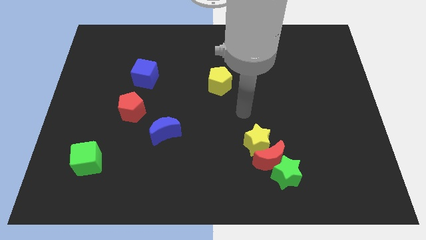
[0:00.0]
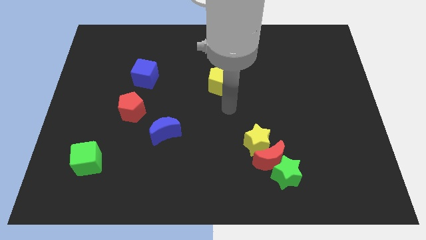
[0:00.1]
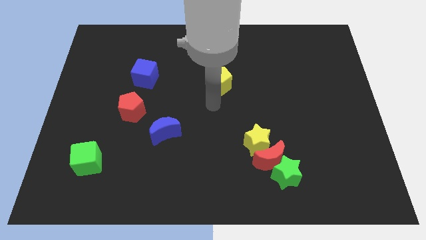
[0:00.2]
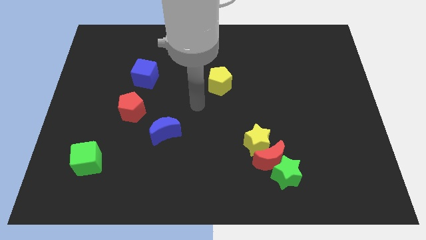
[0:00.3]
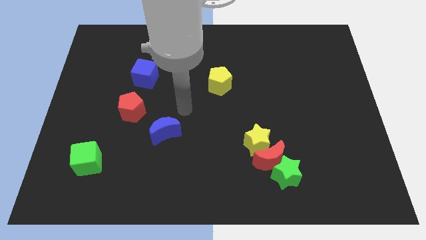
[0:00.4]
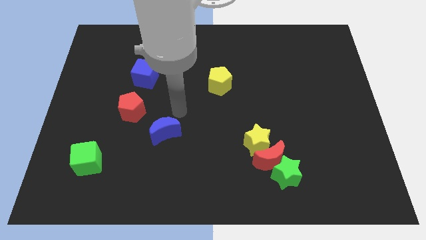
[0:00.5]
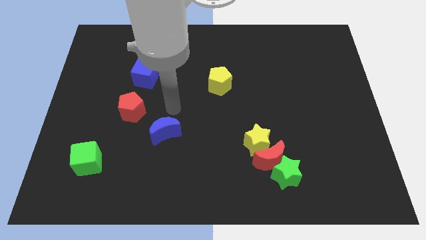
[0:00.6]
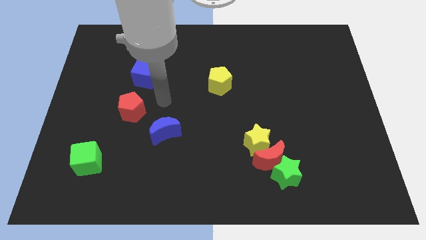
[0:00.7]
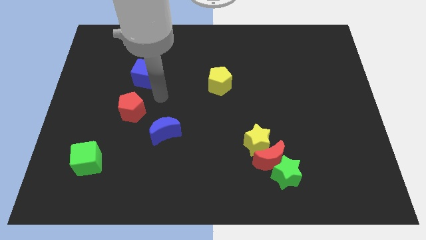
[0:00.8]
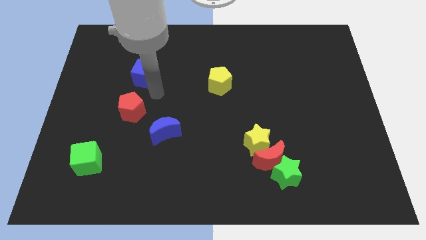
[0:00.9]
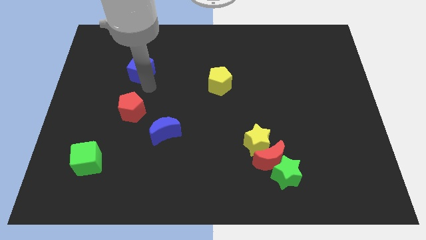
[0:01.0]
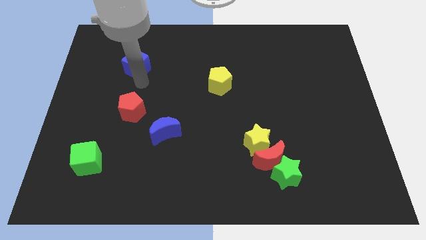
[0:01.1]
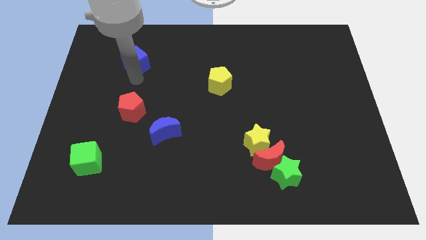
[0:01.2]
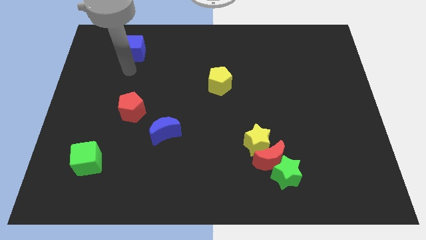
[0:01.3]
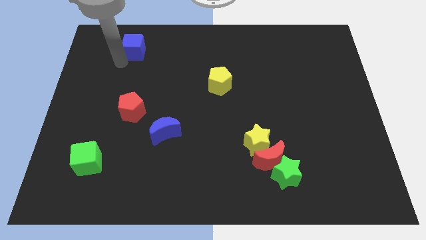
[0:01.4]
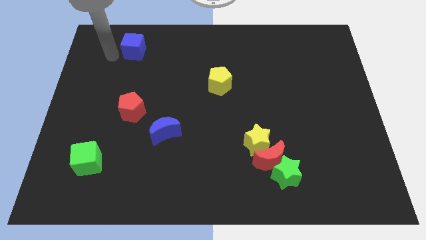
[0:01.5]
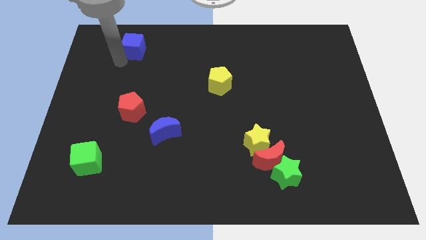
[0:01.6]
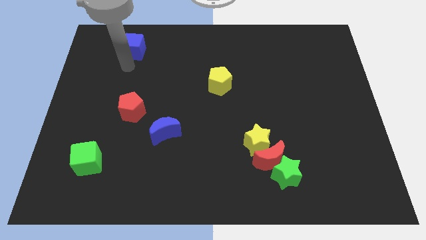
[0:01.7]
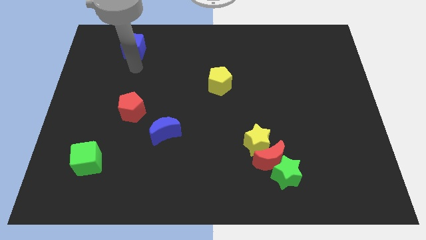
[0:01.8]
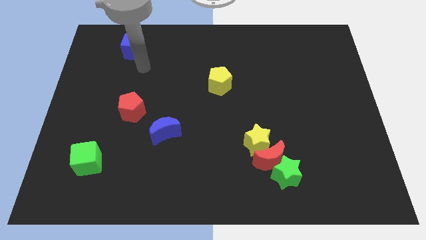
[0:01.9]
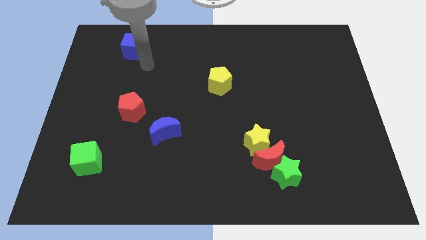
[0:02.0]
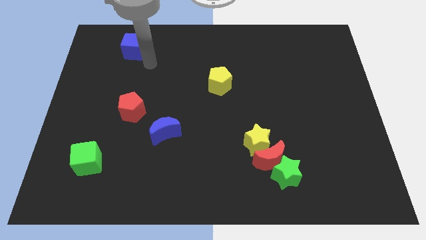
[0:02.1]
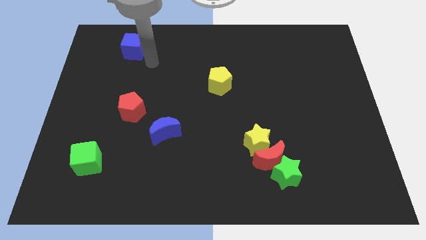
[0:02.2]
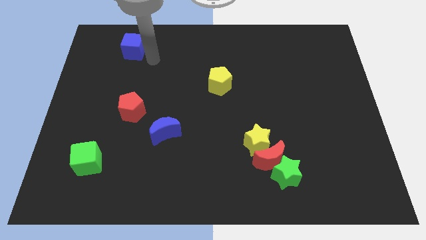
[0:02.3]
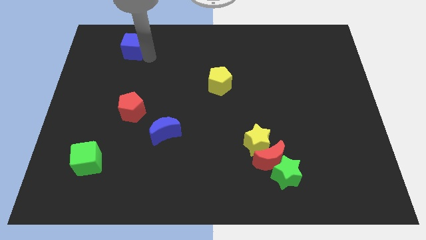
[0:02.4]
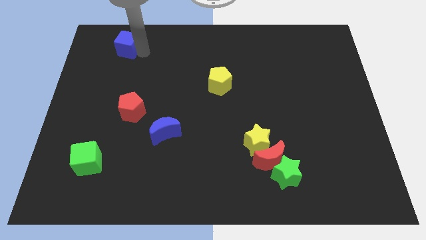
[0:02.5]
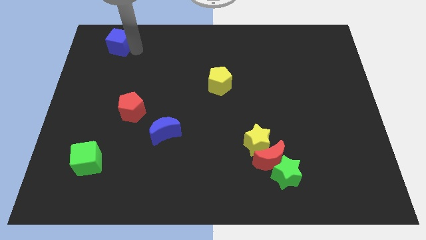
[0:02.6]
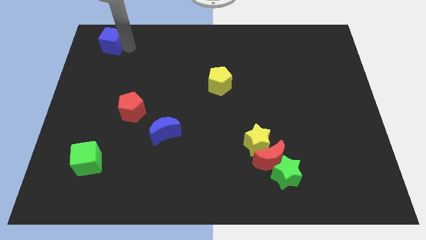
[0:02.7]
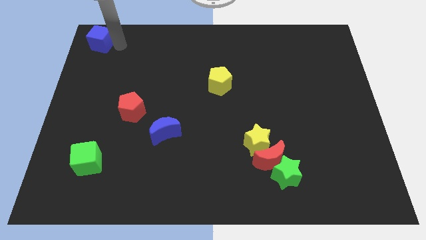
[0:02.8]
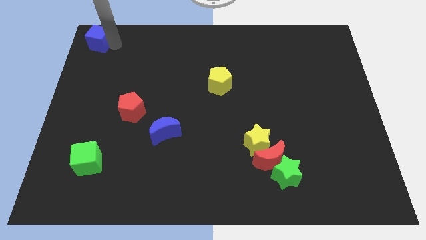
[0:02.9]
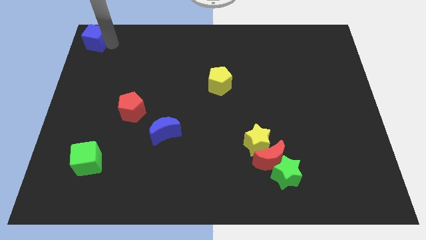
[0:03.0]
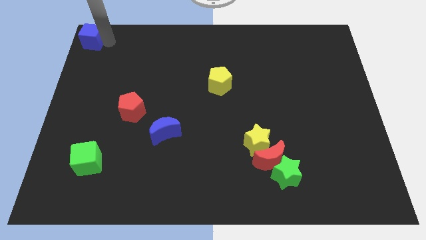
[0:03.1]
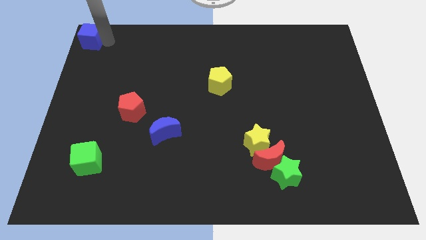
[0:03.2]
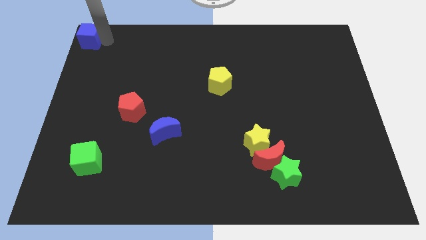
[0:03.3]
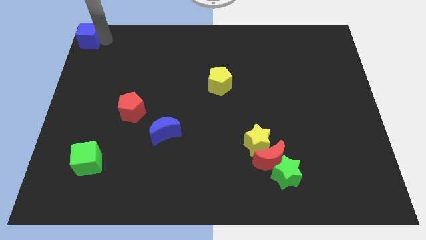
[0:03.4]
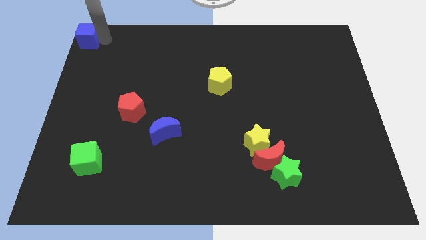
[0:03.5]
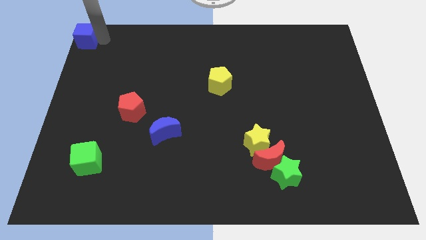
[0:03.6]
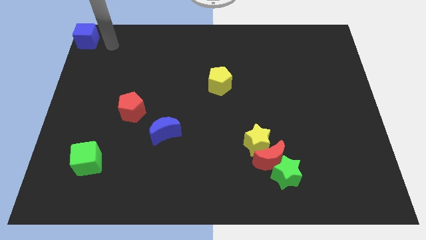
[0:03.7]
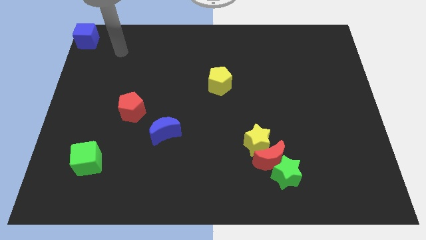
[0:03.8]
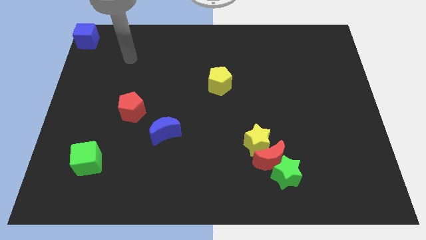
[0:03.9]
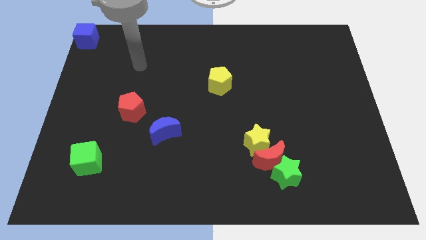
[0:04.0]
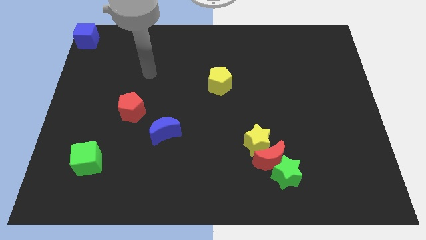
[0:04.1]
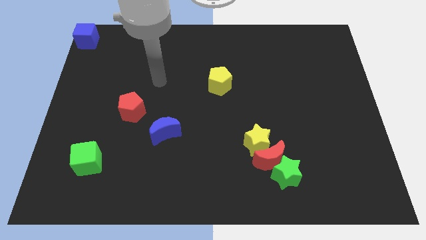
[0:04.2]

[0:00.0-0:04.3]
place the blue cube at the top left corner

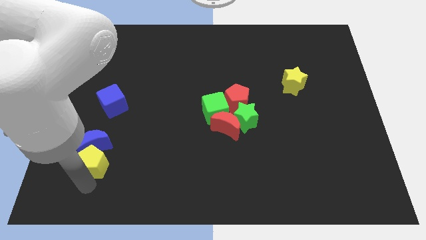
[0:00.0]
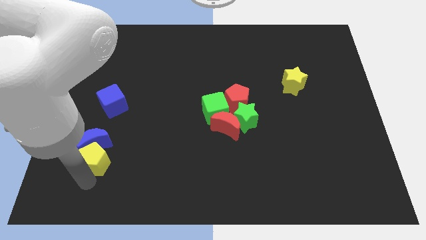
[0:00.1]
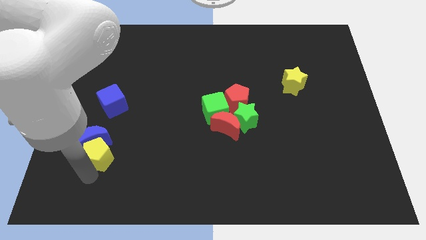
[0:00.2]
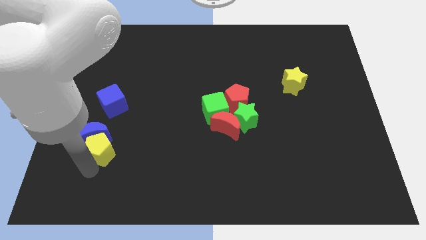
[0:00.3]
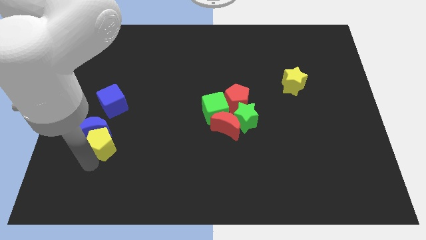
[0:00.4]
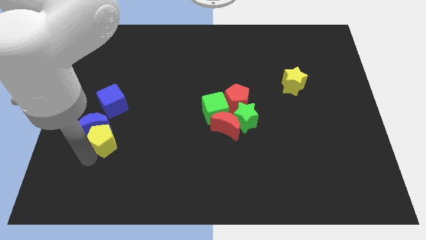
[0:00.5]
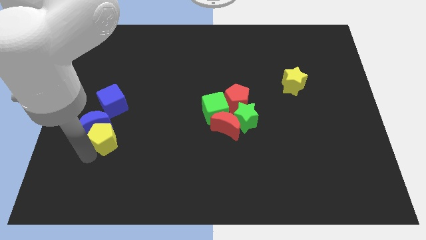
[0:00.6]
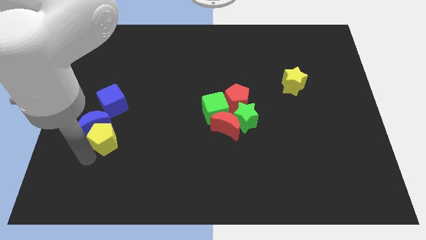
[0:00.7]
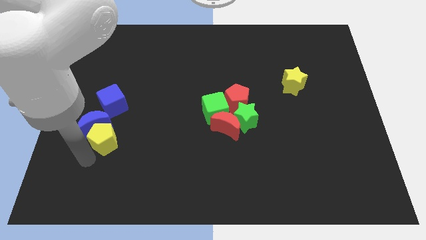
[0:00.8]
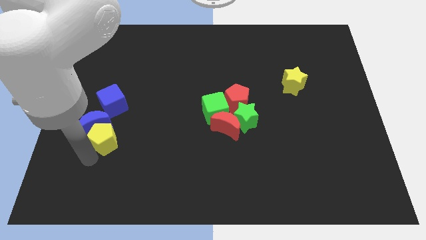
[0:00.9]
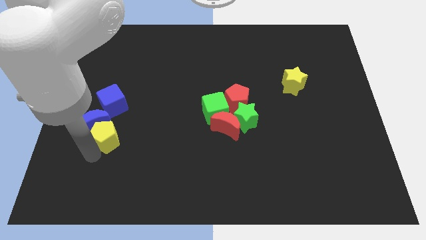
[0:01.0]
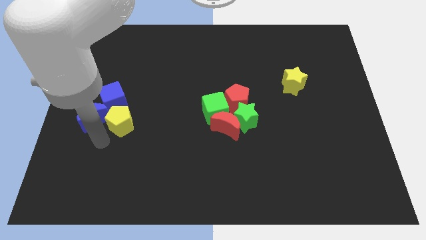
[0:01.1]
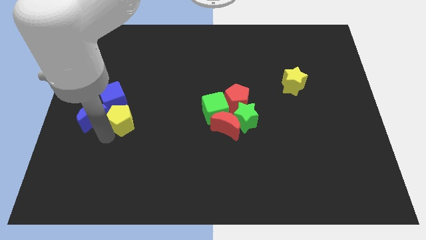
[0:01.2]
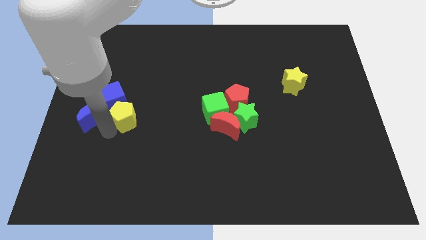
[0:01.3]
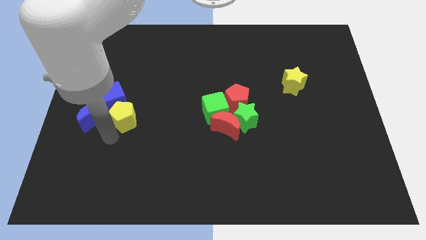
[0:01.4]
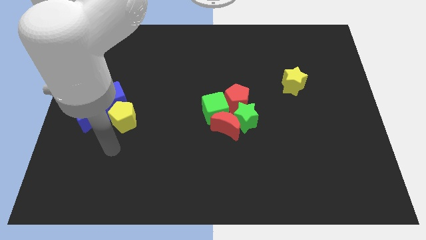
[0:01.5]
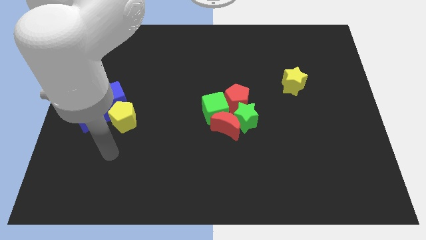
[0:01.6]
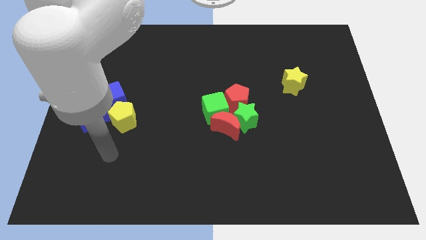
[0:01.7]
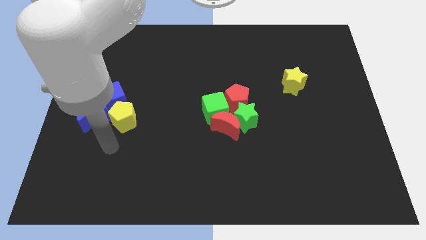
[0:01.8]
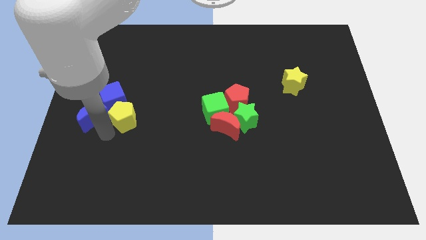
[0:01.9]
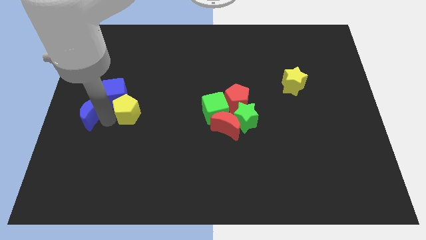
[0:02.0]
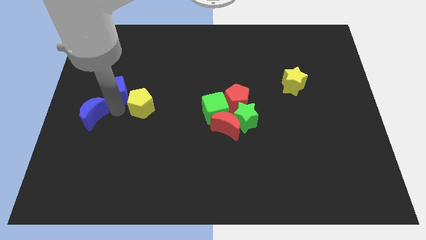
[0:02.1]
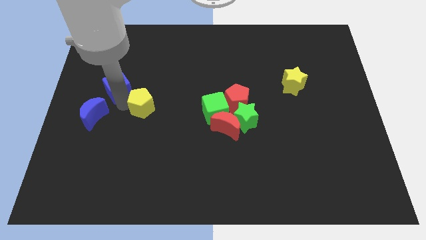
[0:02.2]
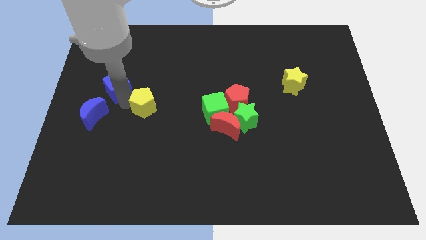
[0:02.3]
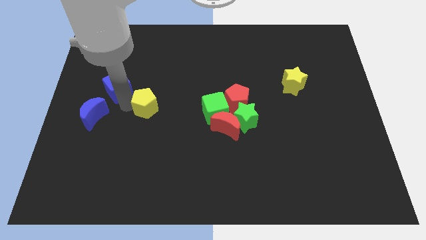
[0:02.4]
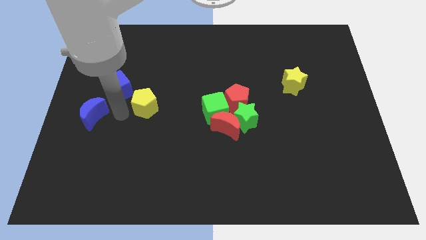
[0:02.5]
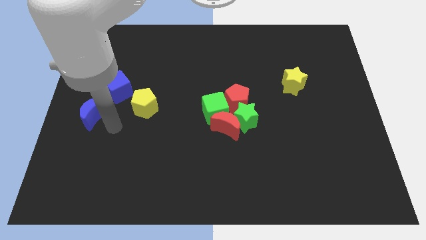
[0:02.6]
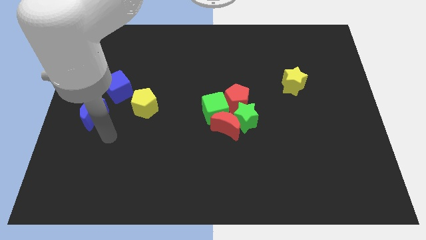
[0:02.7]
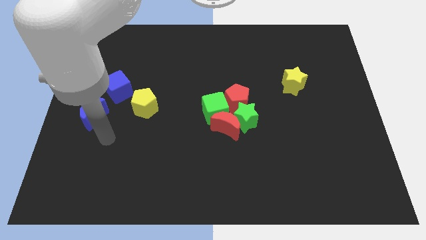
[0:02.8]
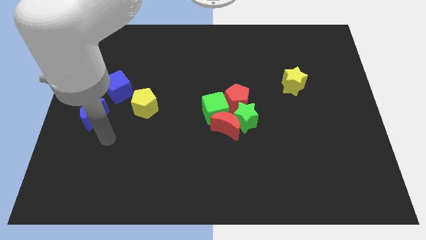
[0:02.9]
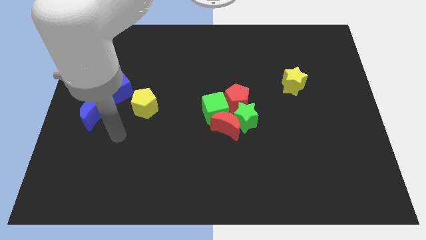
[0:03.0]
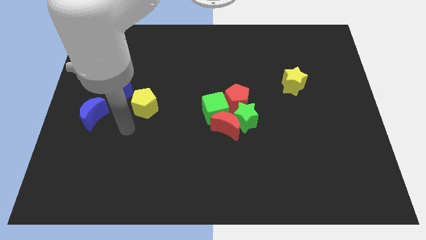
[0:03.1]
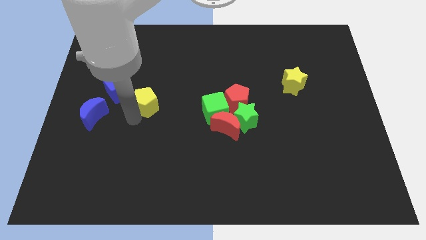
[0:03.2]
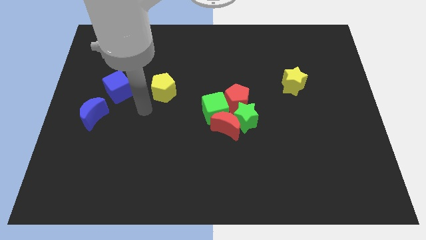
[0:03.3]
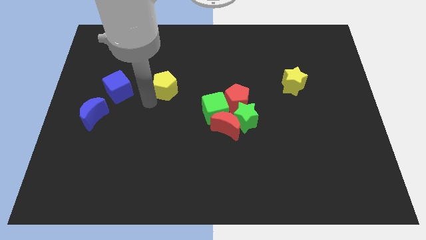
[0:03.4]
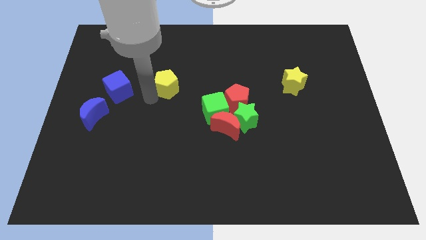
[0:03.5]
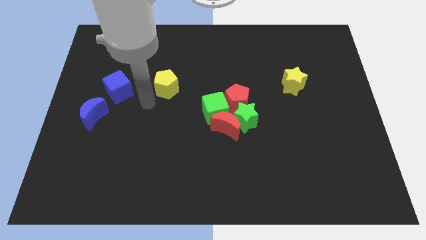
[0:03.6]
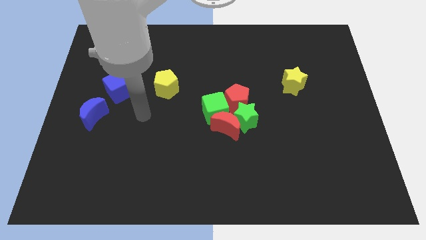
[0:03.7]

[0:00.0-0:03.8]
push yellow pentagon slightly towards up

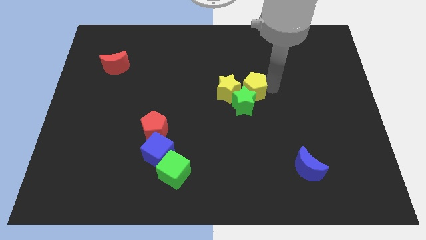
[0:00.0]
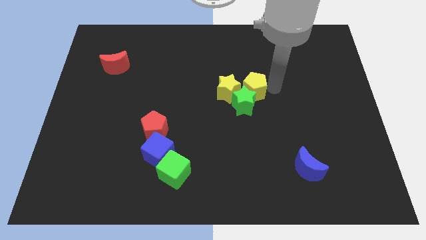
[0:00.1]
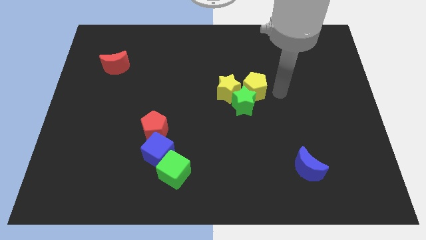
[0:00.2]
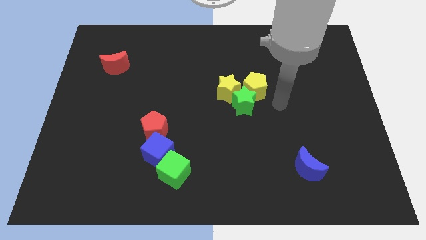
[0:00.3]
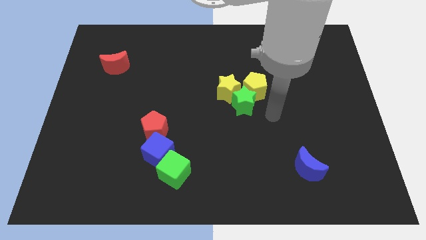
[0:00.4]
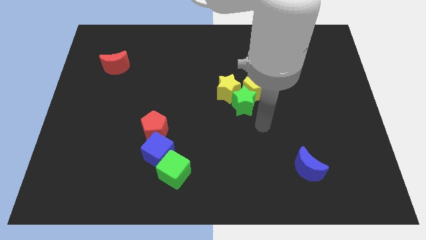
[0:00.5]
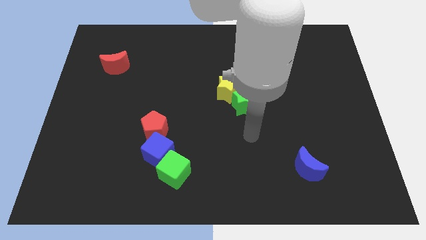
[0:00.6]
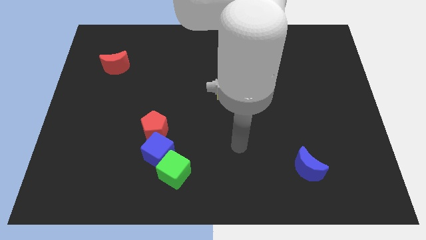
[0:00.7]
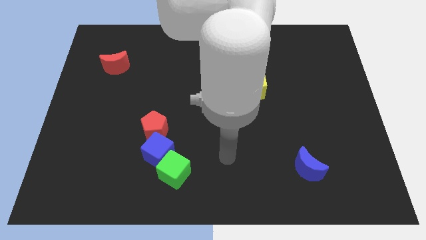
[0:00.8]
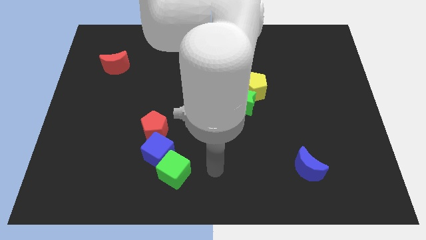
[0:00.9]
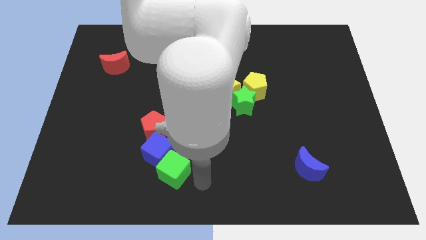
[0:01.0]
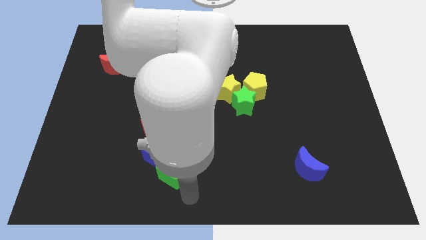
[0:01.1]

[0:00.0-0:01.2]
move your arm away from yellow pentagon
